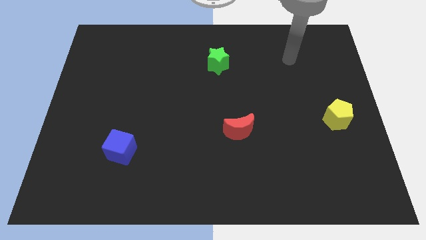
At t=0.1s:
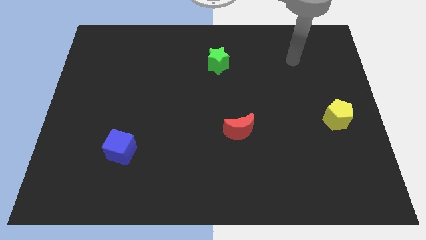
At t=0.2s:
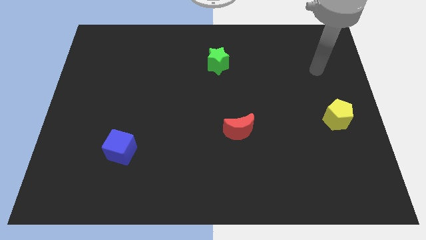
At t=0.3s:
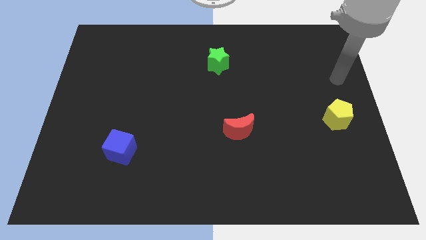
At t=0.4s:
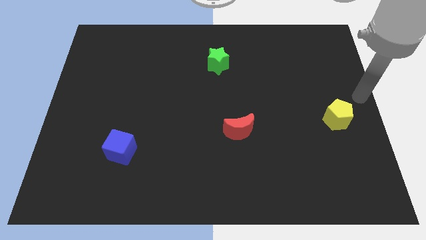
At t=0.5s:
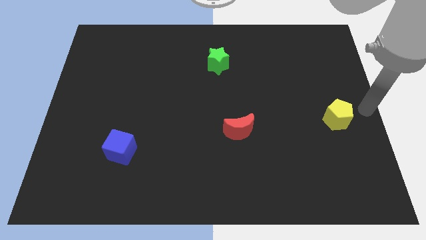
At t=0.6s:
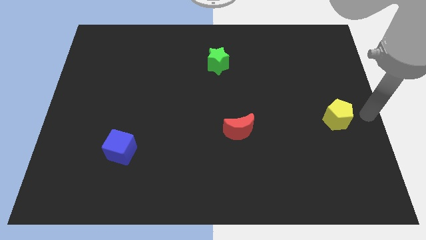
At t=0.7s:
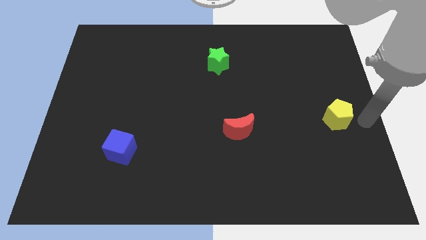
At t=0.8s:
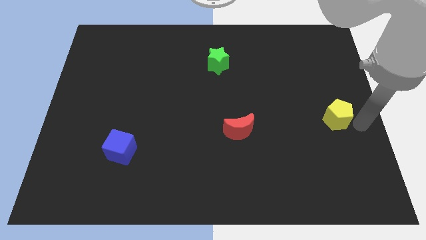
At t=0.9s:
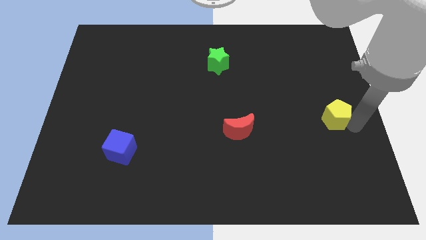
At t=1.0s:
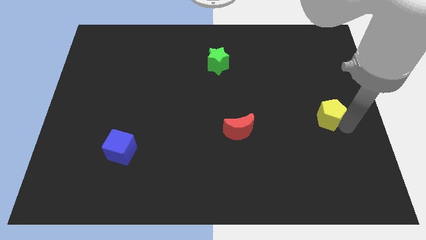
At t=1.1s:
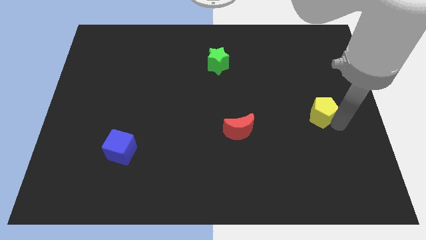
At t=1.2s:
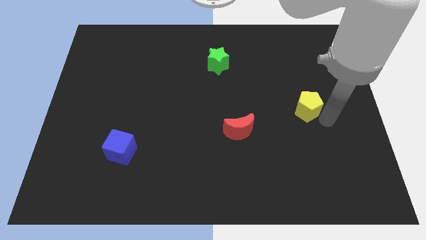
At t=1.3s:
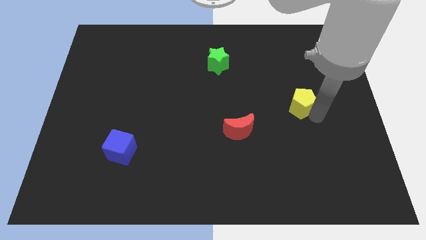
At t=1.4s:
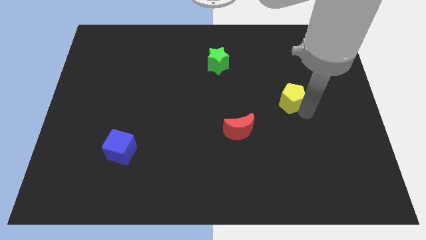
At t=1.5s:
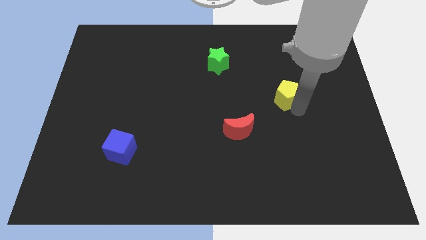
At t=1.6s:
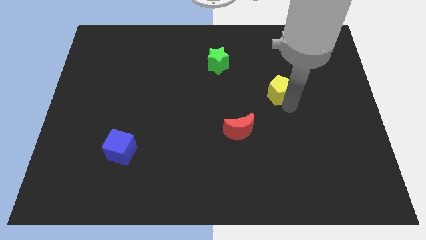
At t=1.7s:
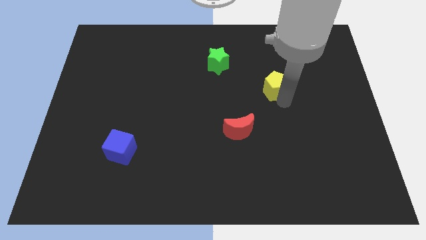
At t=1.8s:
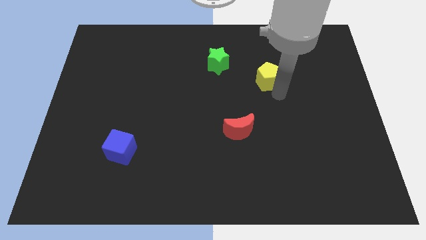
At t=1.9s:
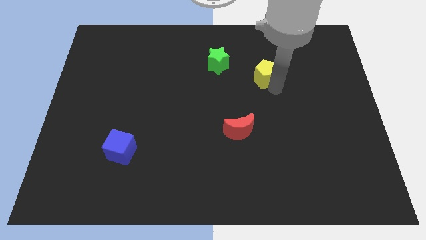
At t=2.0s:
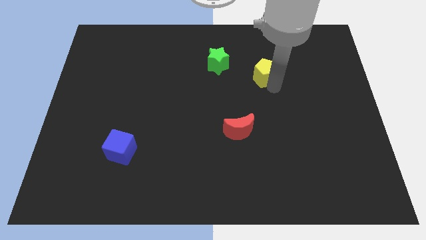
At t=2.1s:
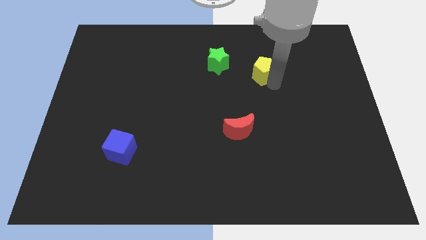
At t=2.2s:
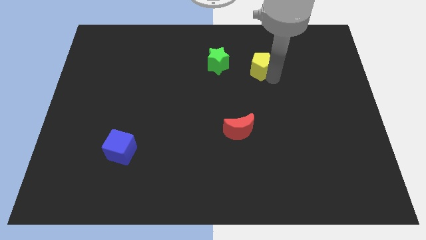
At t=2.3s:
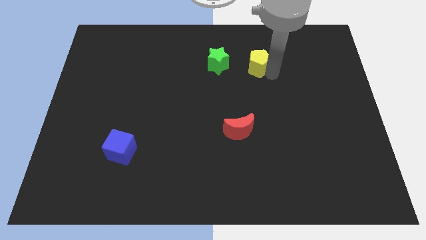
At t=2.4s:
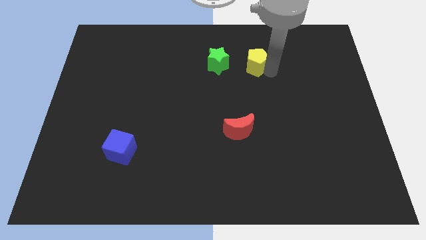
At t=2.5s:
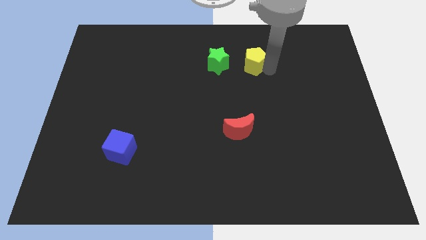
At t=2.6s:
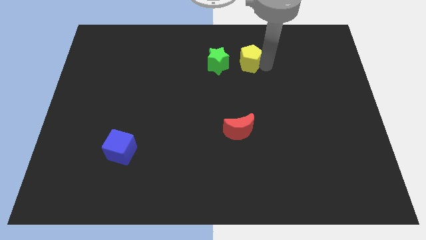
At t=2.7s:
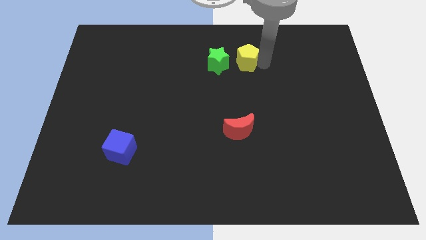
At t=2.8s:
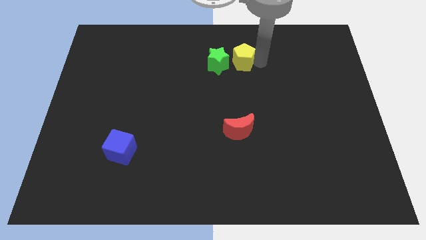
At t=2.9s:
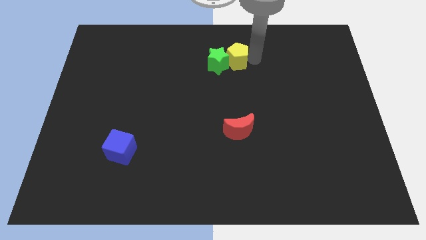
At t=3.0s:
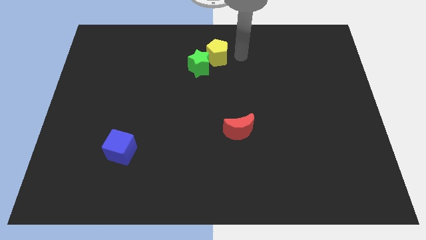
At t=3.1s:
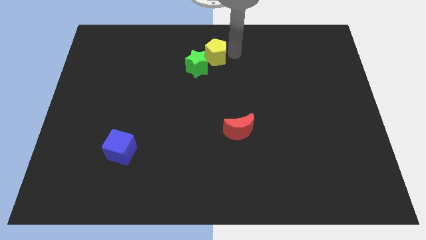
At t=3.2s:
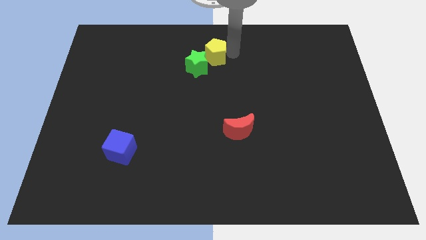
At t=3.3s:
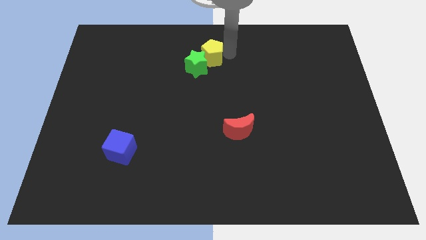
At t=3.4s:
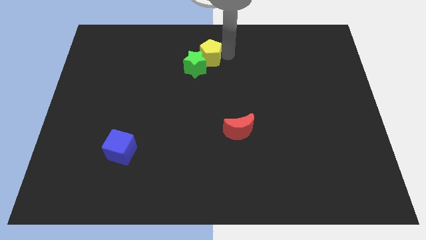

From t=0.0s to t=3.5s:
put the yellow pentagon to the green star

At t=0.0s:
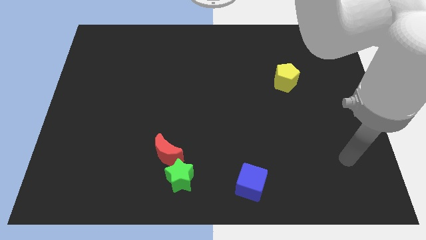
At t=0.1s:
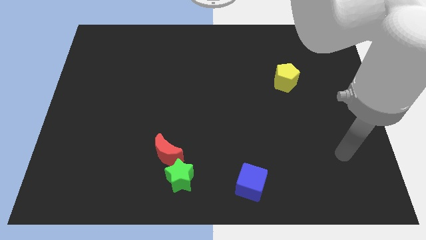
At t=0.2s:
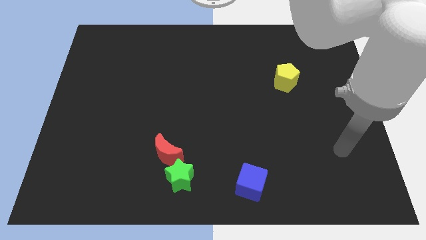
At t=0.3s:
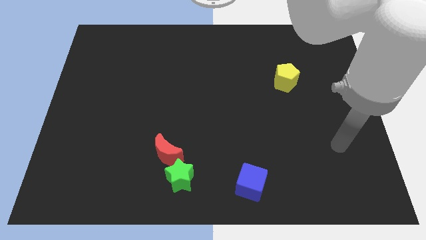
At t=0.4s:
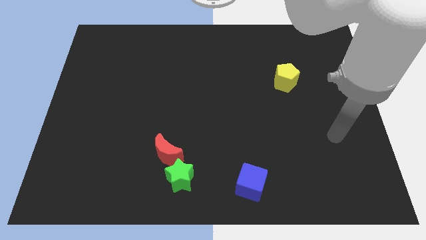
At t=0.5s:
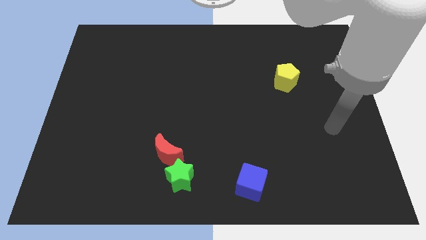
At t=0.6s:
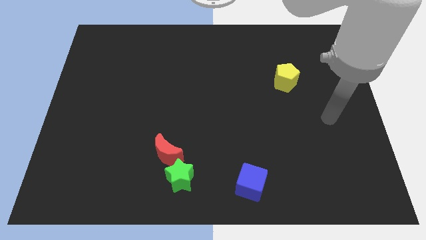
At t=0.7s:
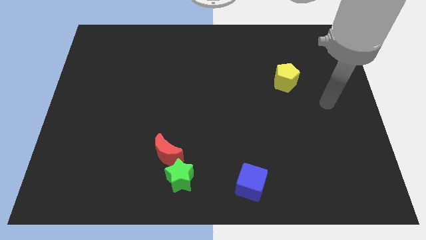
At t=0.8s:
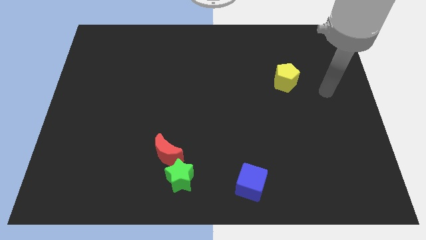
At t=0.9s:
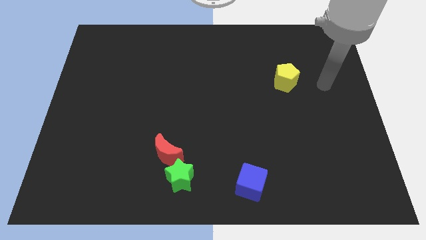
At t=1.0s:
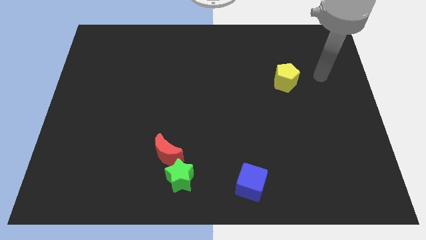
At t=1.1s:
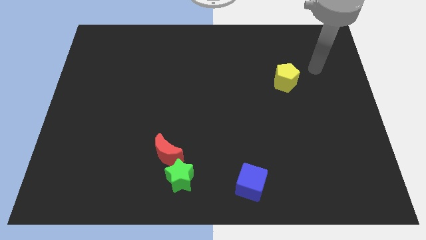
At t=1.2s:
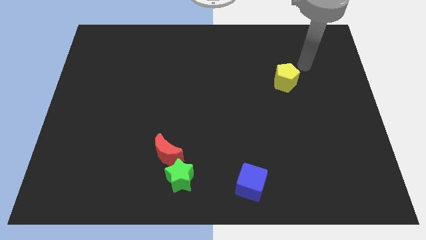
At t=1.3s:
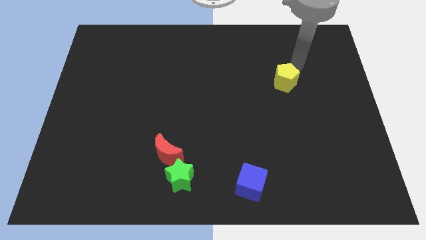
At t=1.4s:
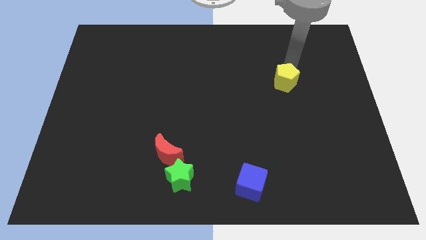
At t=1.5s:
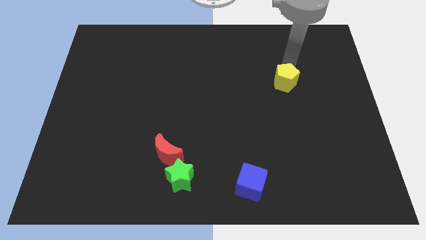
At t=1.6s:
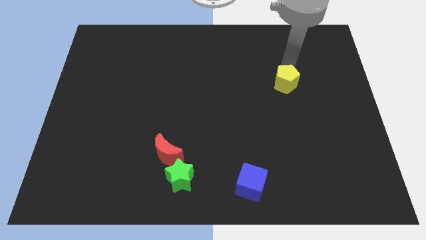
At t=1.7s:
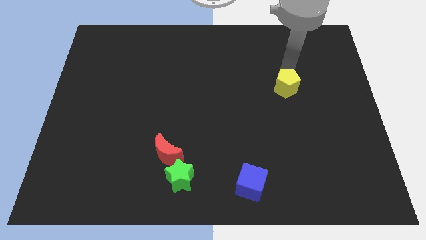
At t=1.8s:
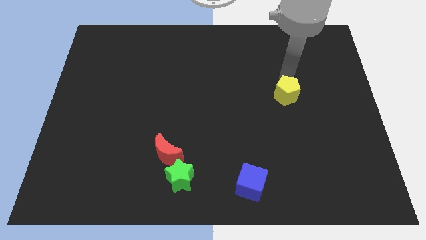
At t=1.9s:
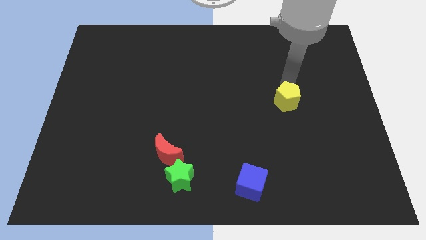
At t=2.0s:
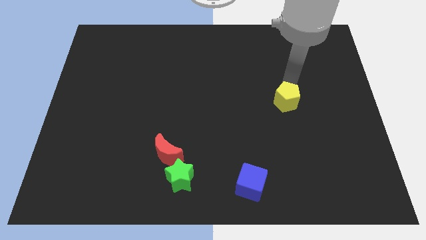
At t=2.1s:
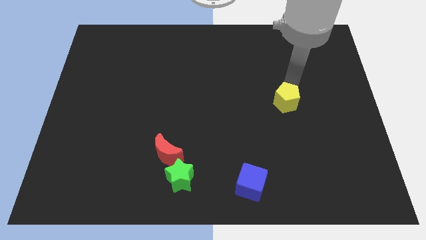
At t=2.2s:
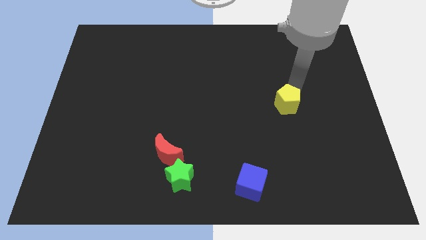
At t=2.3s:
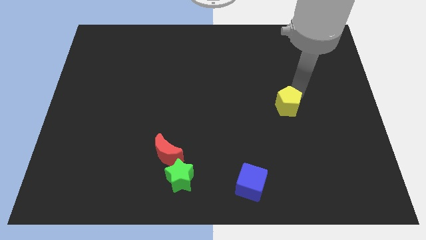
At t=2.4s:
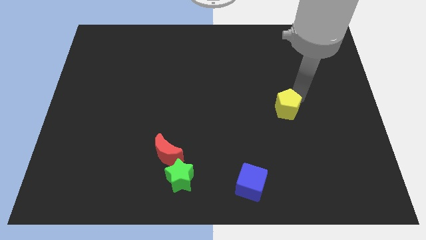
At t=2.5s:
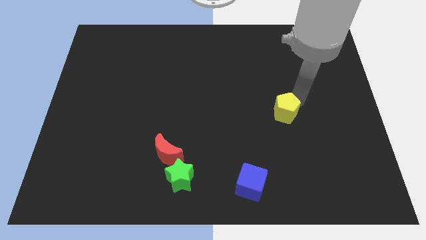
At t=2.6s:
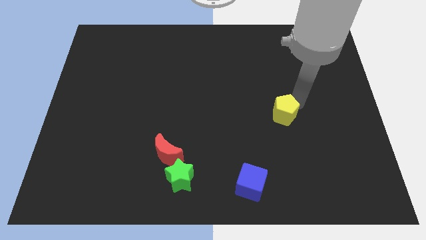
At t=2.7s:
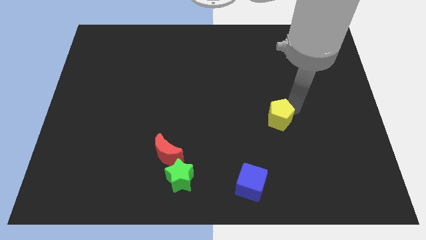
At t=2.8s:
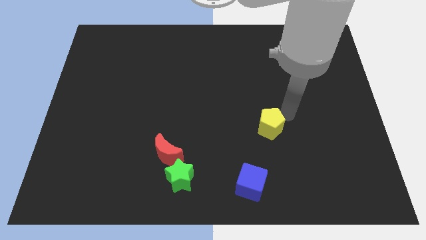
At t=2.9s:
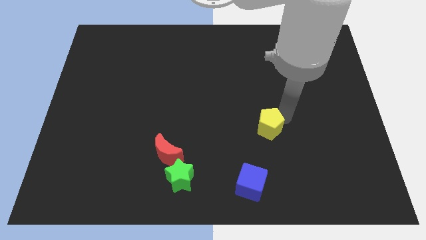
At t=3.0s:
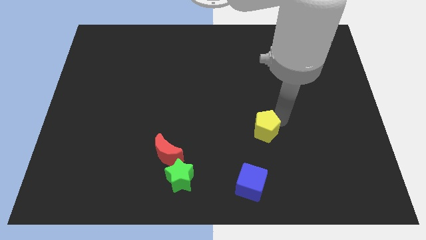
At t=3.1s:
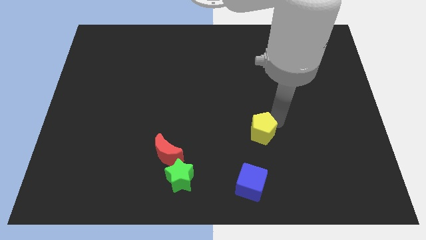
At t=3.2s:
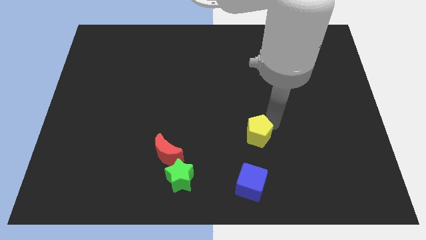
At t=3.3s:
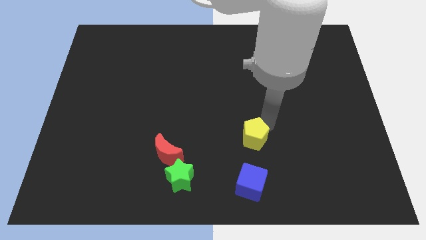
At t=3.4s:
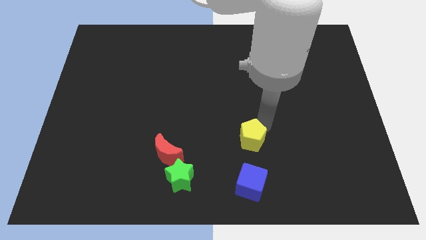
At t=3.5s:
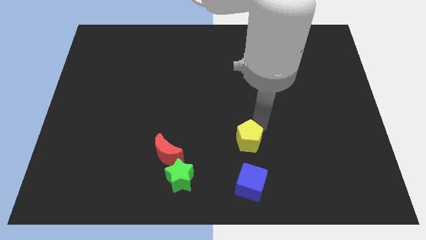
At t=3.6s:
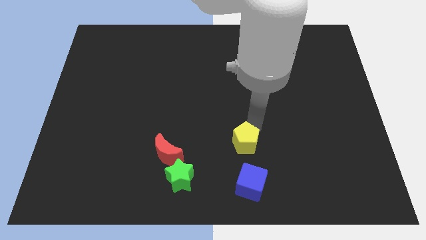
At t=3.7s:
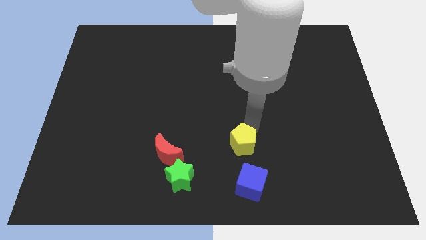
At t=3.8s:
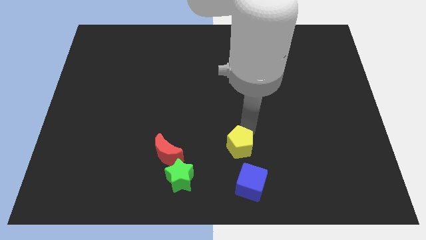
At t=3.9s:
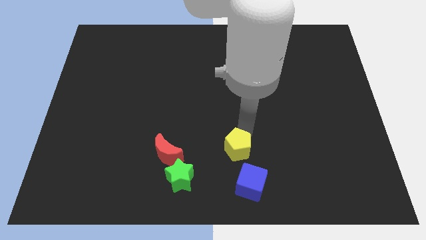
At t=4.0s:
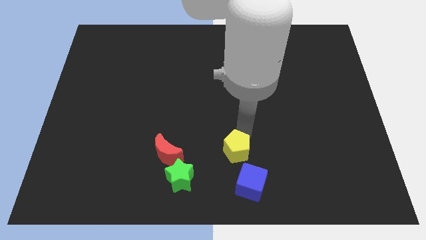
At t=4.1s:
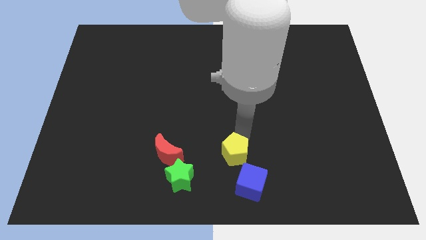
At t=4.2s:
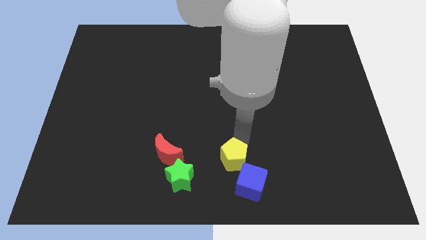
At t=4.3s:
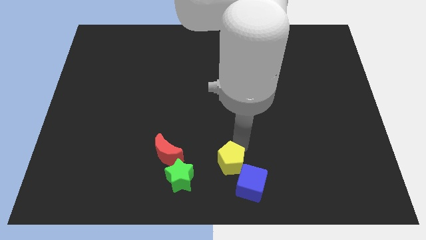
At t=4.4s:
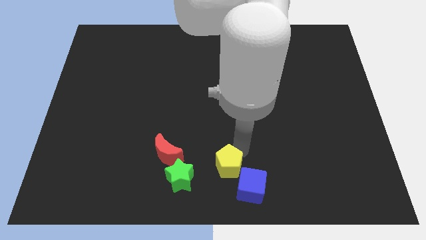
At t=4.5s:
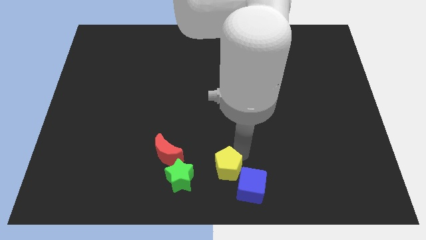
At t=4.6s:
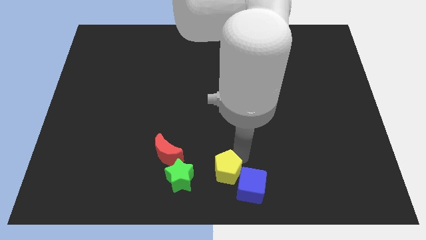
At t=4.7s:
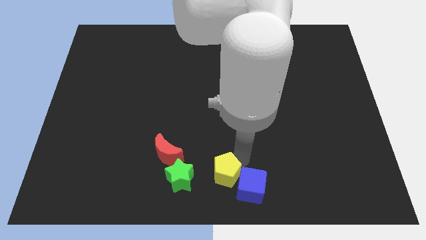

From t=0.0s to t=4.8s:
push the yellow pentagon towards the cube

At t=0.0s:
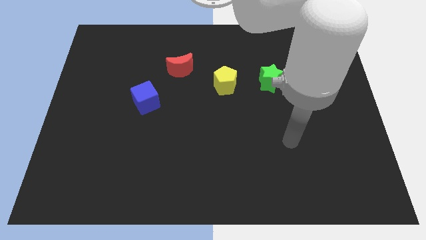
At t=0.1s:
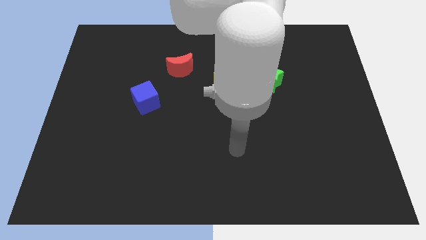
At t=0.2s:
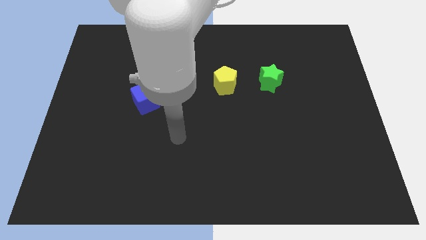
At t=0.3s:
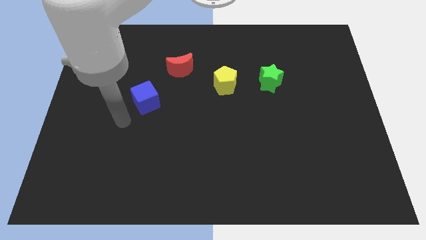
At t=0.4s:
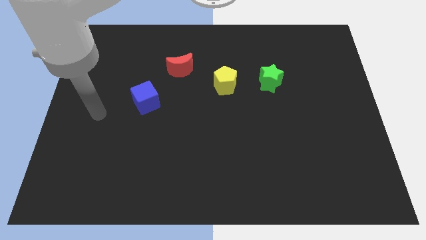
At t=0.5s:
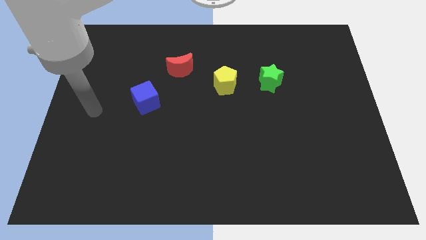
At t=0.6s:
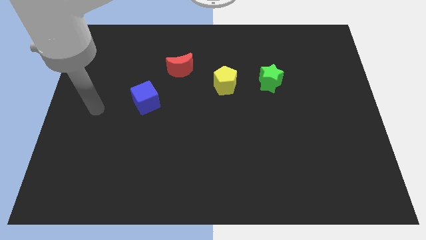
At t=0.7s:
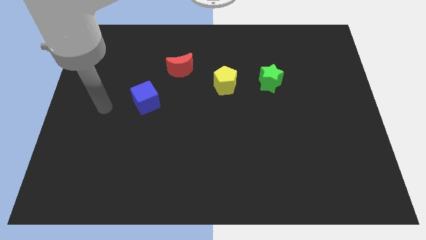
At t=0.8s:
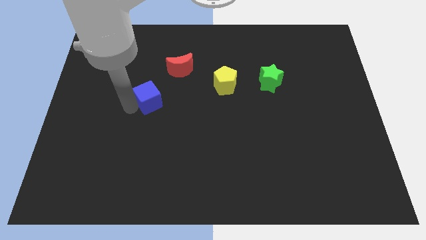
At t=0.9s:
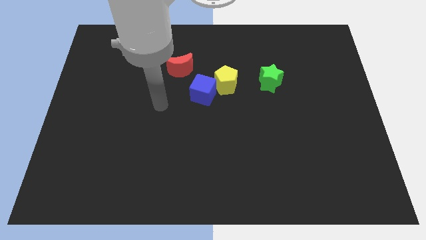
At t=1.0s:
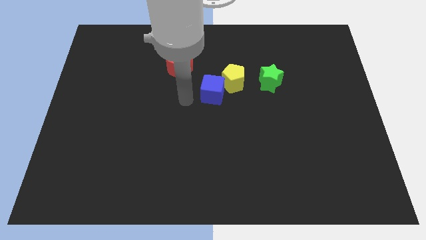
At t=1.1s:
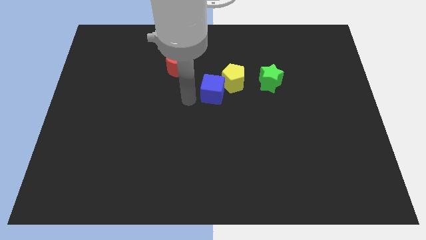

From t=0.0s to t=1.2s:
move the blue block close to the yellow pentagon
